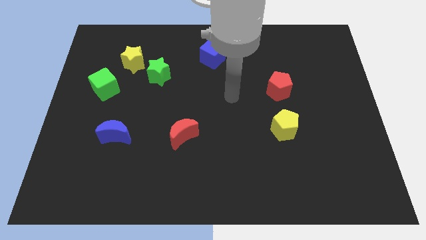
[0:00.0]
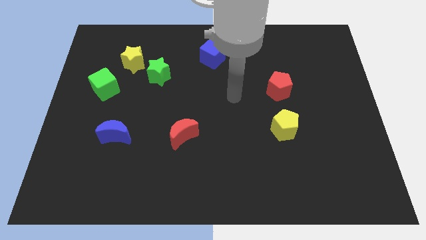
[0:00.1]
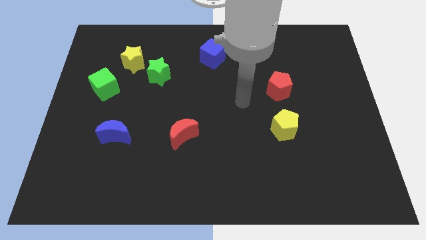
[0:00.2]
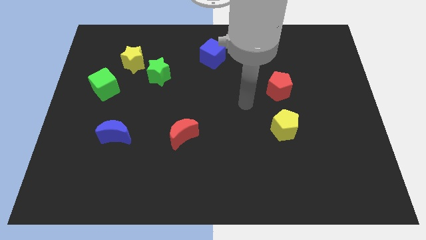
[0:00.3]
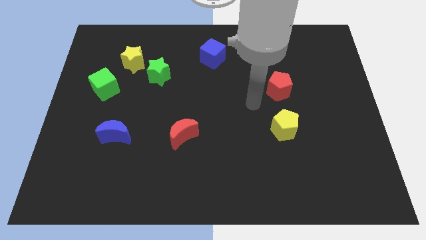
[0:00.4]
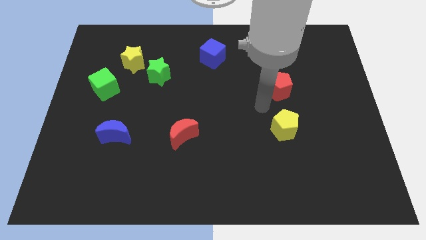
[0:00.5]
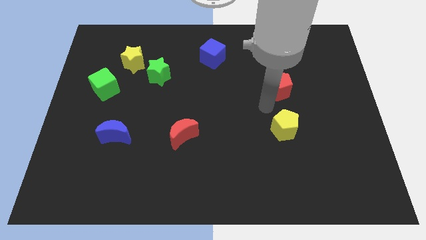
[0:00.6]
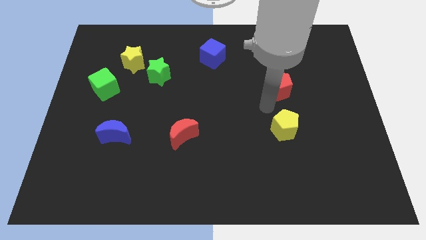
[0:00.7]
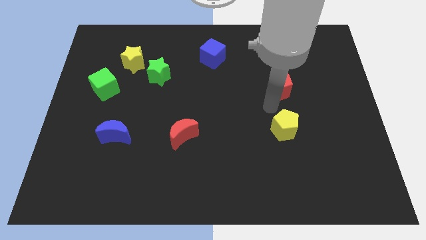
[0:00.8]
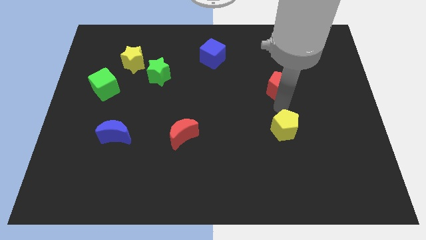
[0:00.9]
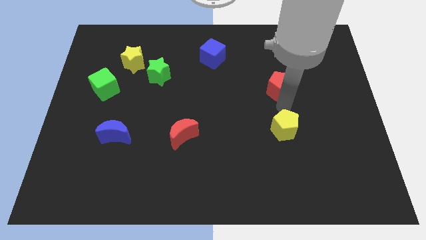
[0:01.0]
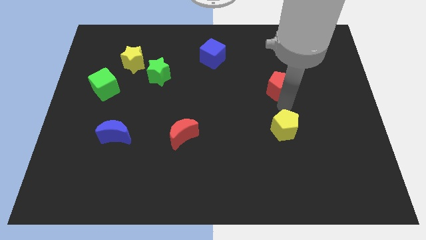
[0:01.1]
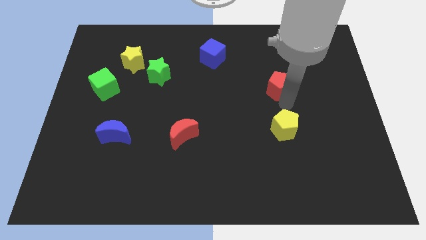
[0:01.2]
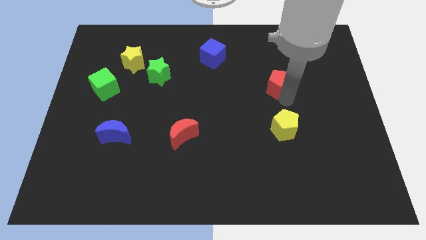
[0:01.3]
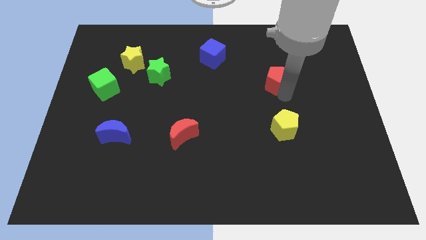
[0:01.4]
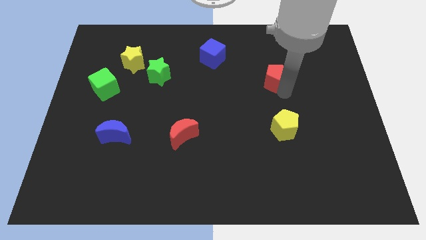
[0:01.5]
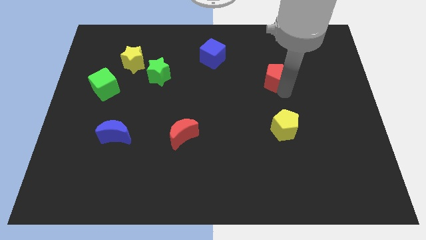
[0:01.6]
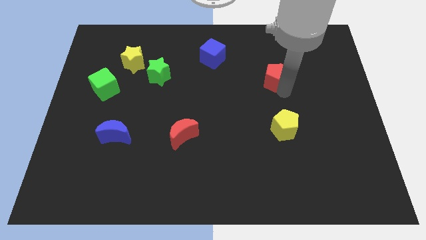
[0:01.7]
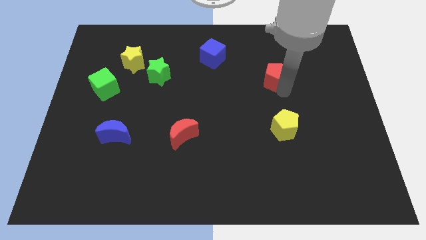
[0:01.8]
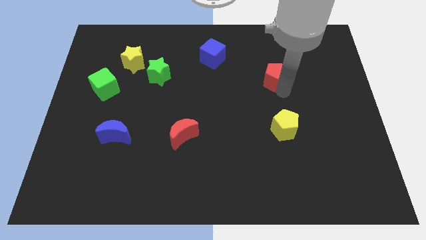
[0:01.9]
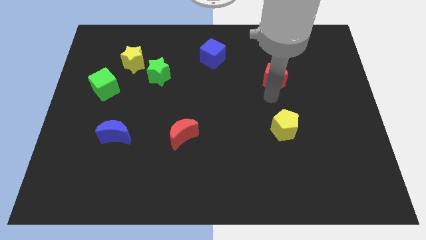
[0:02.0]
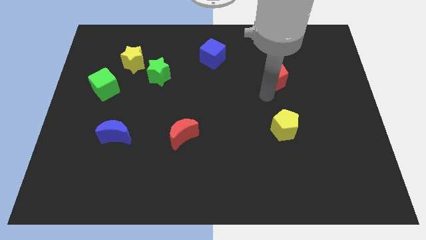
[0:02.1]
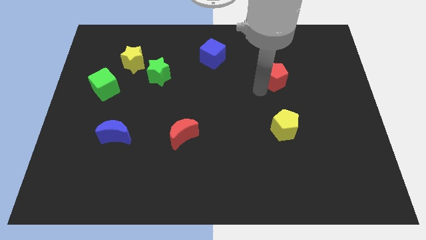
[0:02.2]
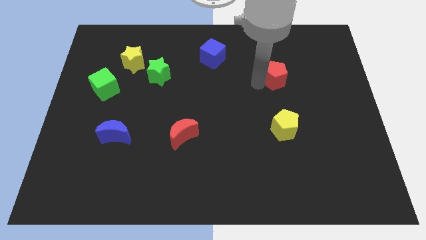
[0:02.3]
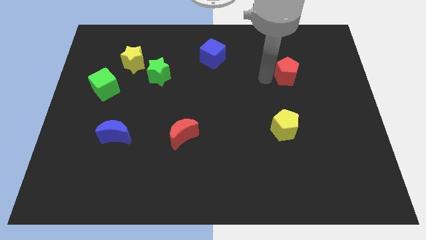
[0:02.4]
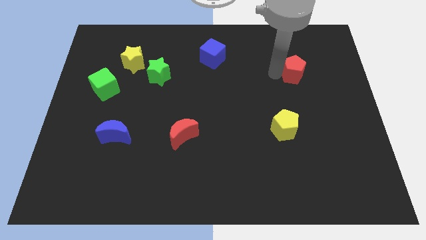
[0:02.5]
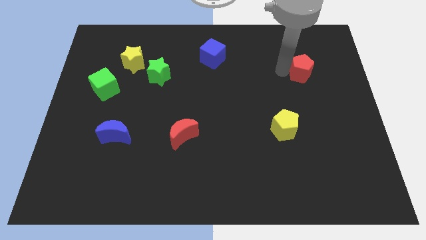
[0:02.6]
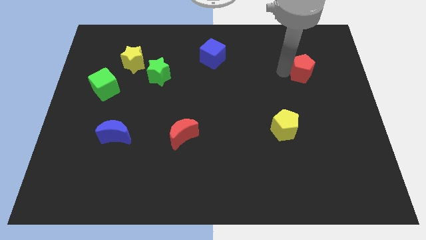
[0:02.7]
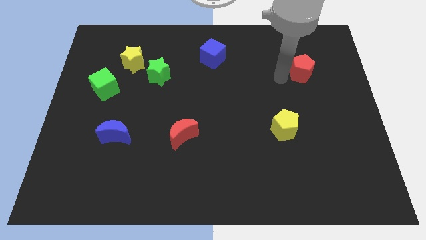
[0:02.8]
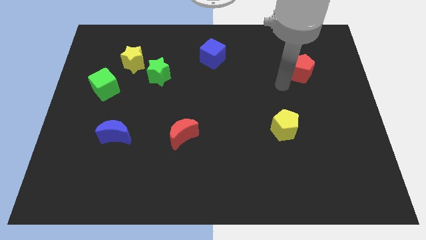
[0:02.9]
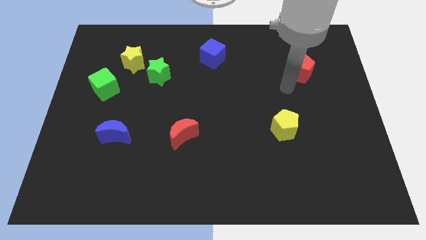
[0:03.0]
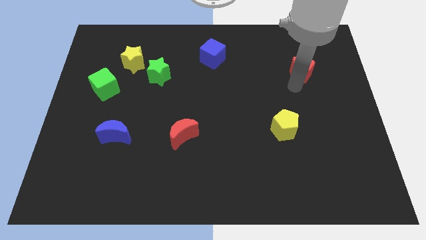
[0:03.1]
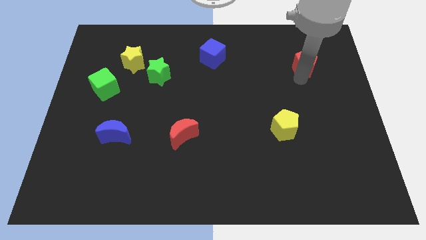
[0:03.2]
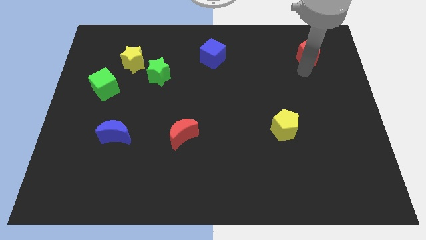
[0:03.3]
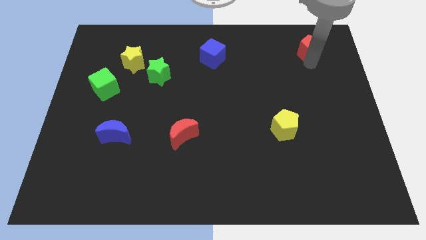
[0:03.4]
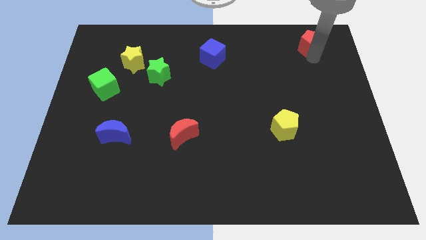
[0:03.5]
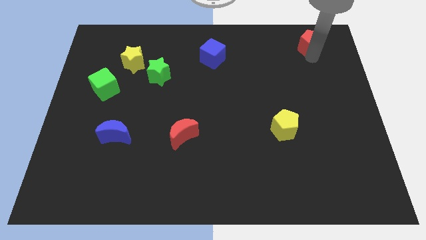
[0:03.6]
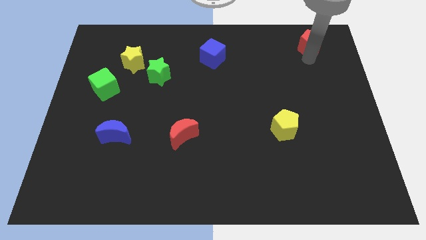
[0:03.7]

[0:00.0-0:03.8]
push the red pentagon to the top right side of the board

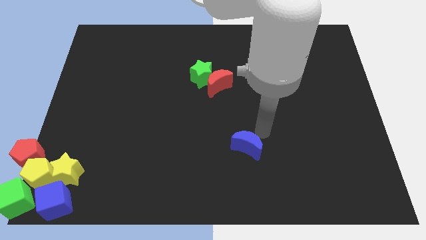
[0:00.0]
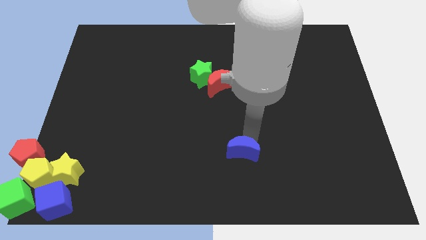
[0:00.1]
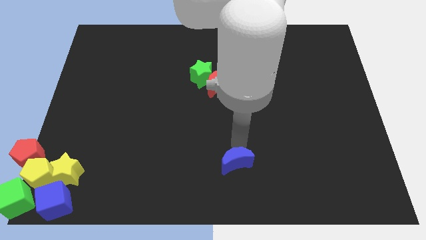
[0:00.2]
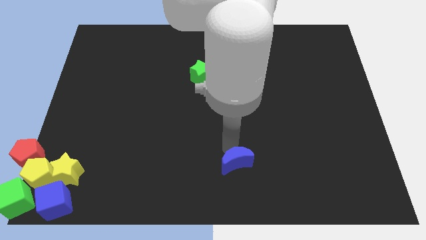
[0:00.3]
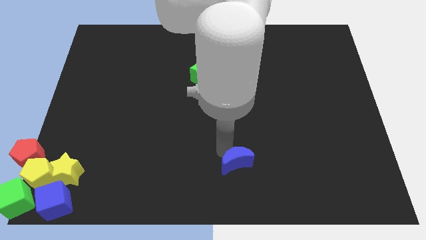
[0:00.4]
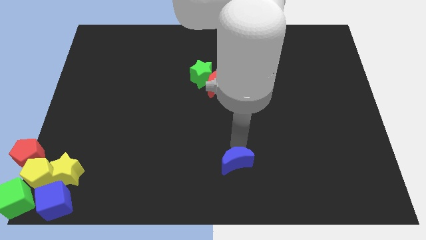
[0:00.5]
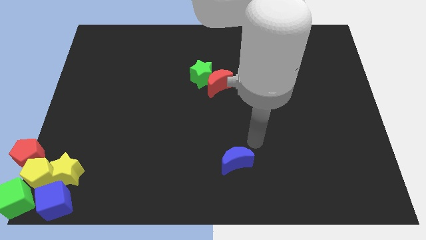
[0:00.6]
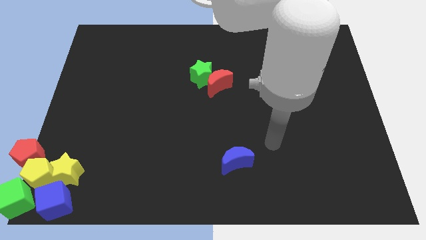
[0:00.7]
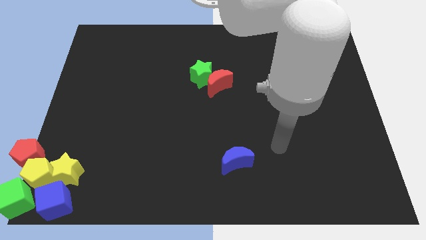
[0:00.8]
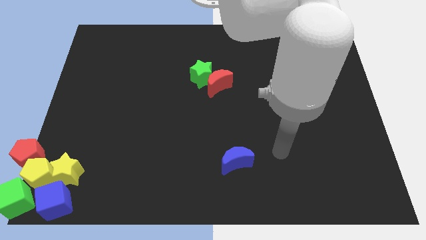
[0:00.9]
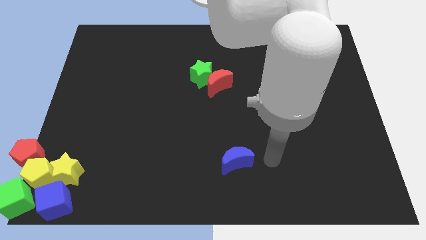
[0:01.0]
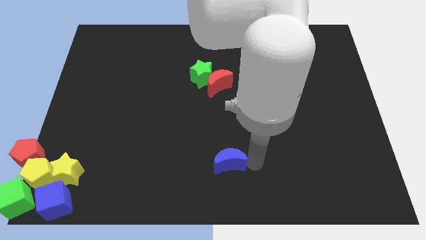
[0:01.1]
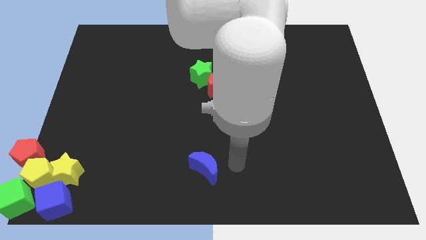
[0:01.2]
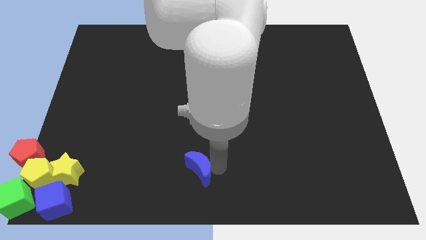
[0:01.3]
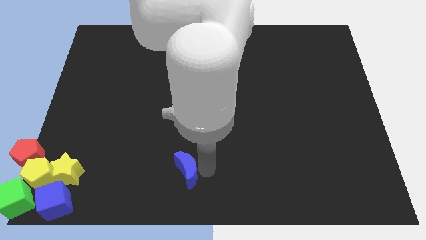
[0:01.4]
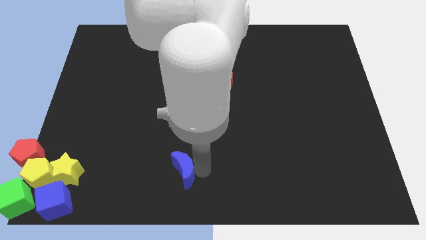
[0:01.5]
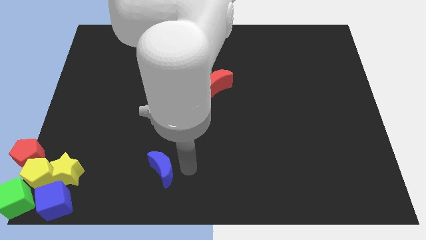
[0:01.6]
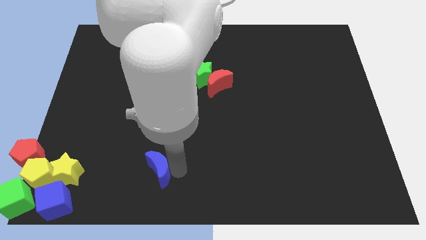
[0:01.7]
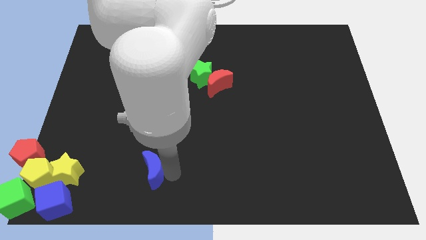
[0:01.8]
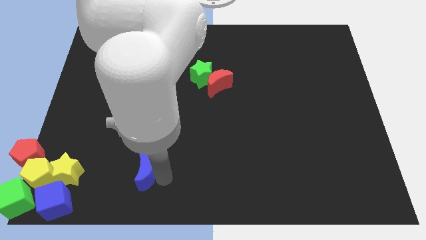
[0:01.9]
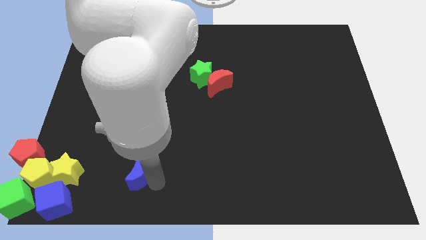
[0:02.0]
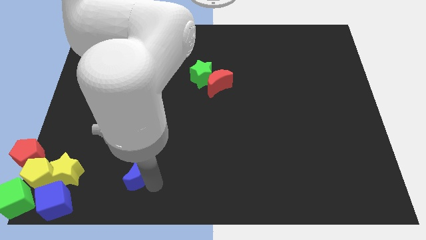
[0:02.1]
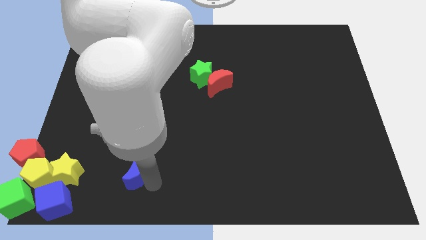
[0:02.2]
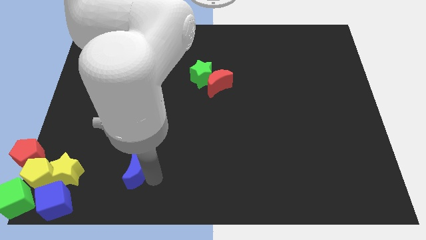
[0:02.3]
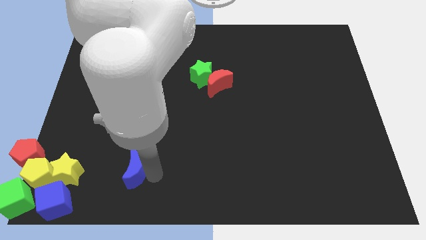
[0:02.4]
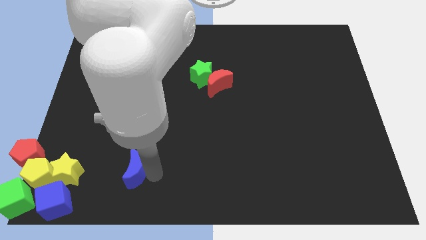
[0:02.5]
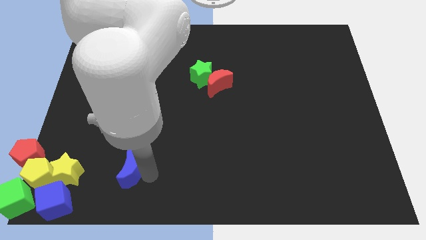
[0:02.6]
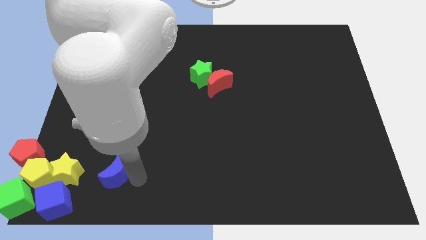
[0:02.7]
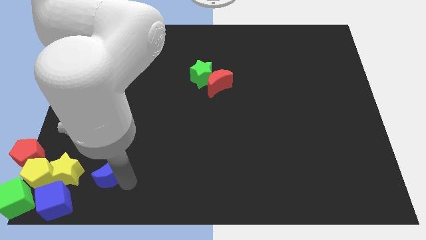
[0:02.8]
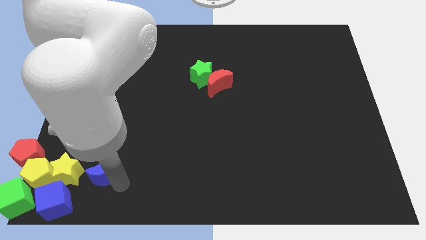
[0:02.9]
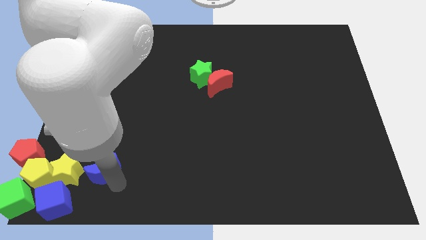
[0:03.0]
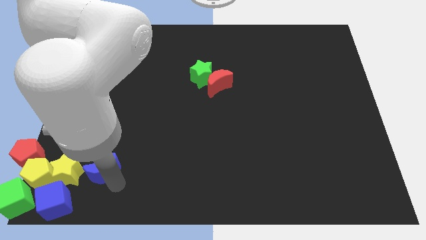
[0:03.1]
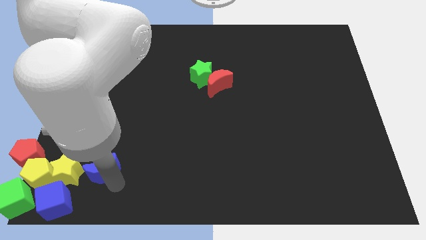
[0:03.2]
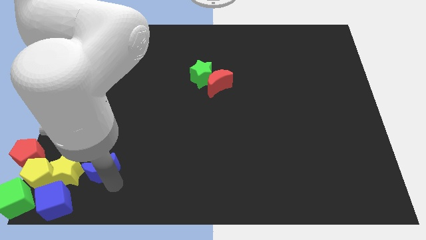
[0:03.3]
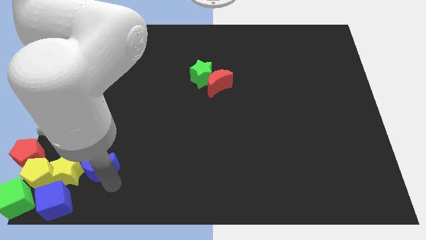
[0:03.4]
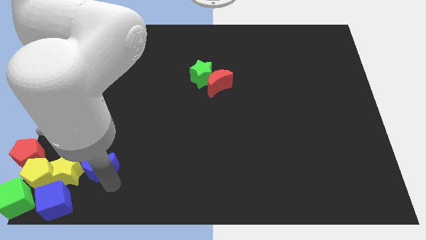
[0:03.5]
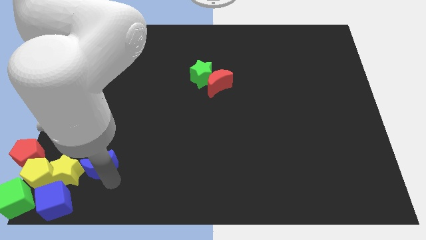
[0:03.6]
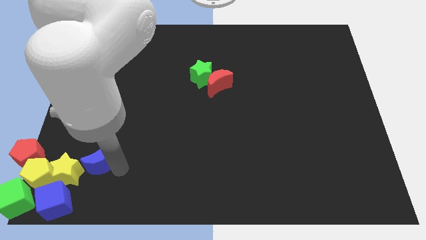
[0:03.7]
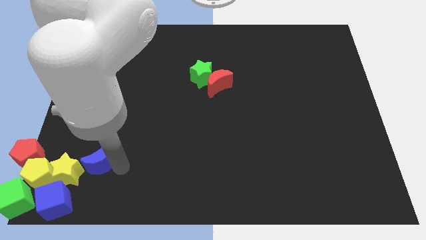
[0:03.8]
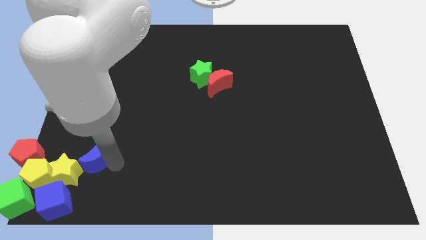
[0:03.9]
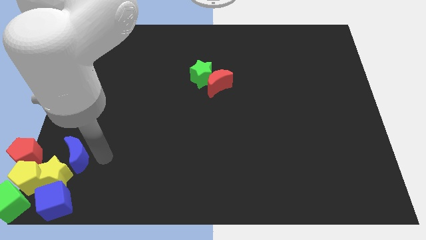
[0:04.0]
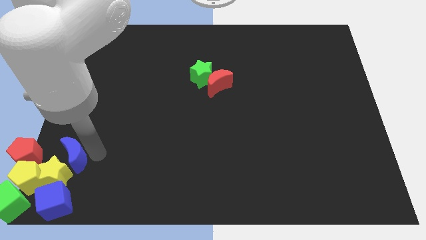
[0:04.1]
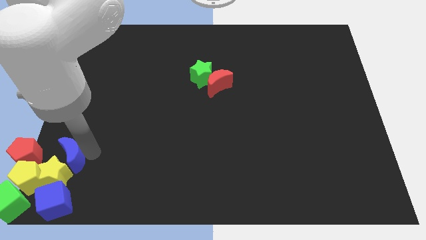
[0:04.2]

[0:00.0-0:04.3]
move the blue crescent into the yellow star

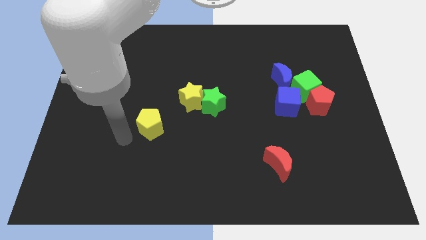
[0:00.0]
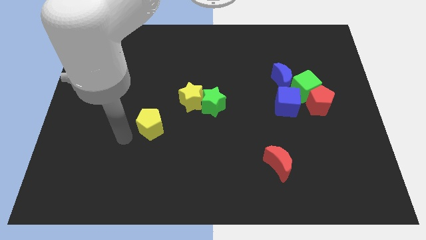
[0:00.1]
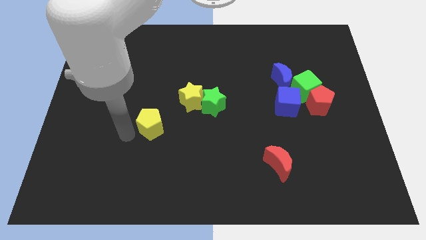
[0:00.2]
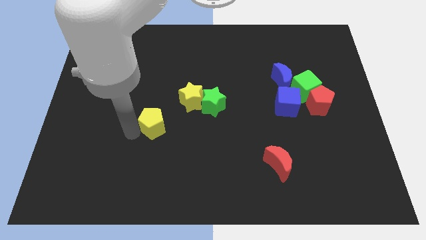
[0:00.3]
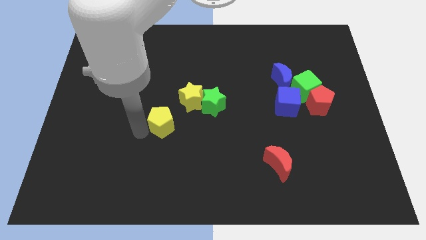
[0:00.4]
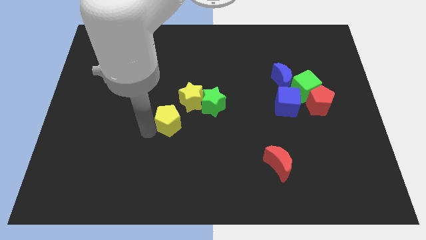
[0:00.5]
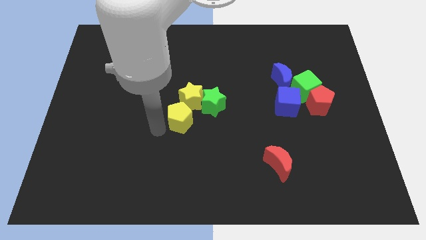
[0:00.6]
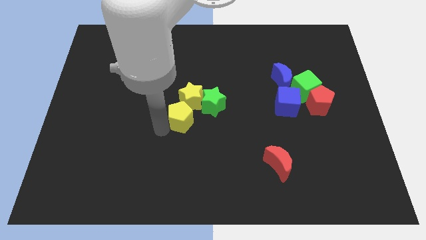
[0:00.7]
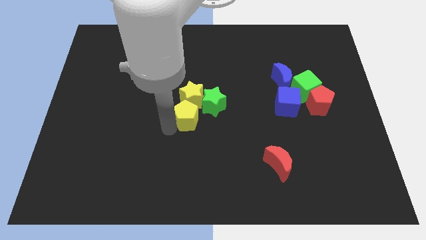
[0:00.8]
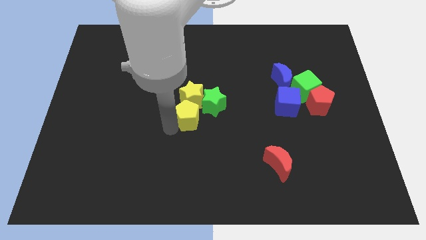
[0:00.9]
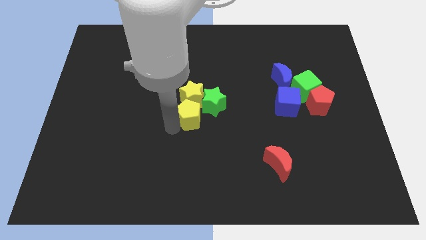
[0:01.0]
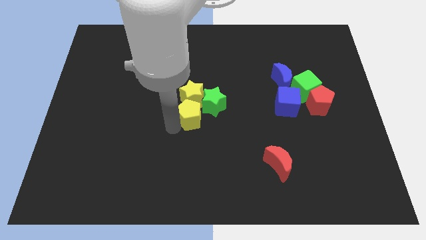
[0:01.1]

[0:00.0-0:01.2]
place the yellow pentagon to the bottom of the yellow star
